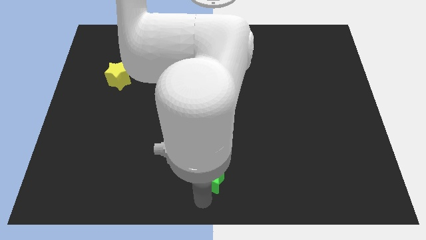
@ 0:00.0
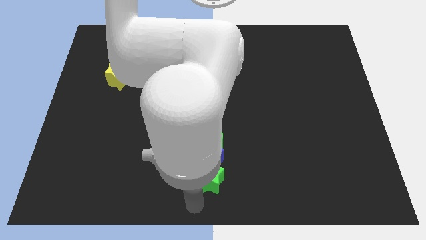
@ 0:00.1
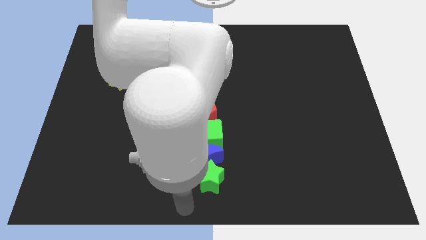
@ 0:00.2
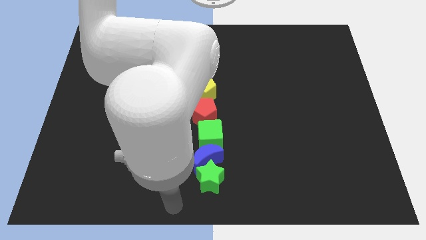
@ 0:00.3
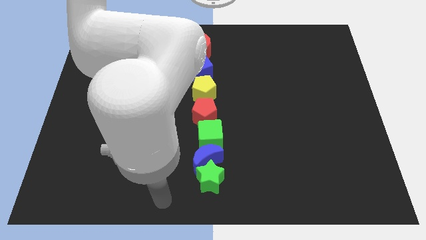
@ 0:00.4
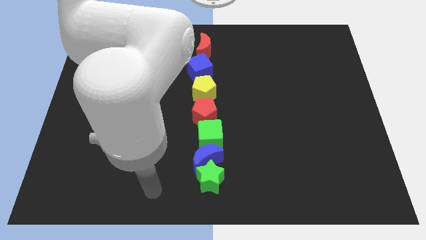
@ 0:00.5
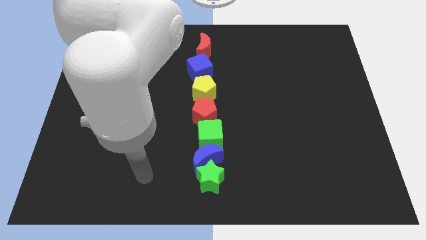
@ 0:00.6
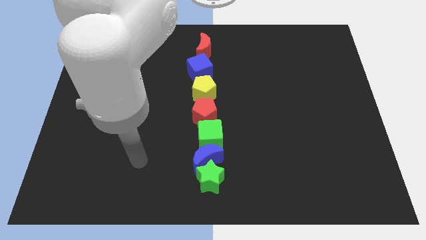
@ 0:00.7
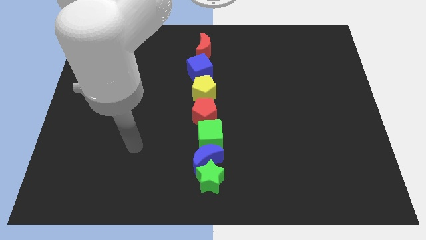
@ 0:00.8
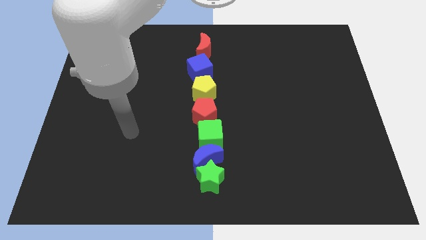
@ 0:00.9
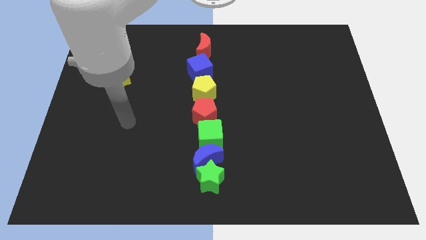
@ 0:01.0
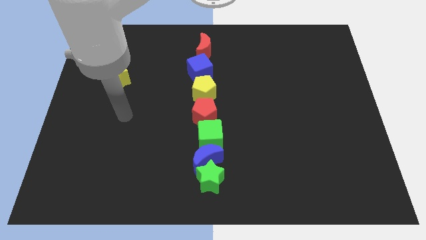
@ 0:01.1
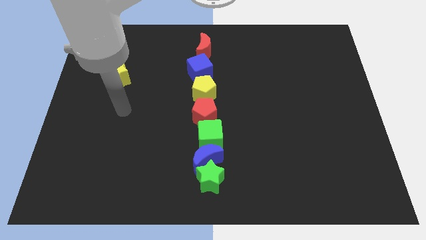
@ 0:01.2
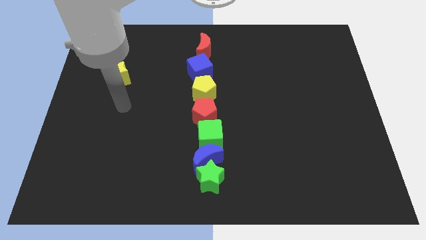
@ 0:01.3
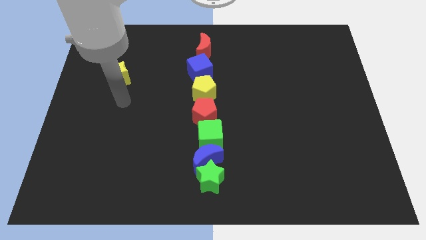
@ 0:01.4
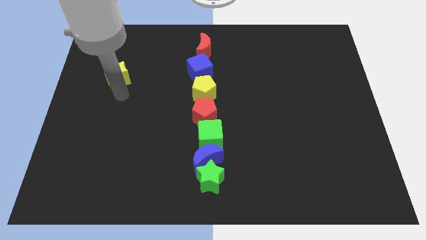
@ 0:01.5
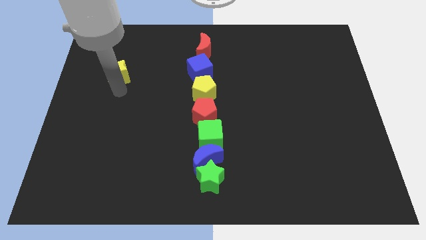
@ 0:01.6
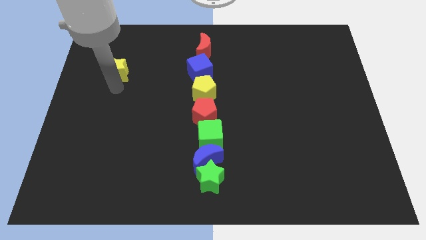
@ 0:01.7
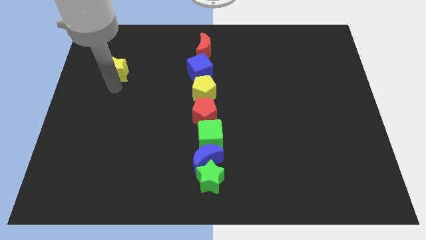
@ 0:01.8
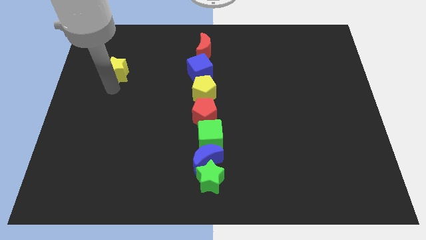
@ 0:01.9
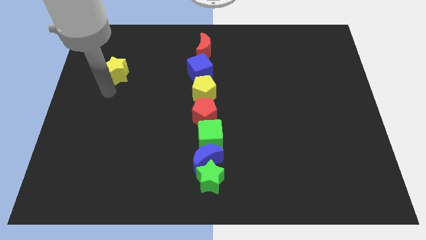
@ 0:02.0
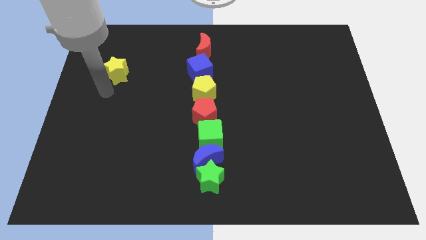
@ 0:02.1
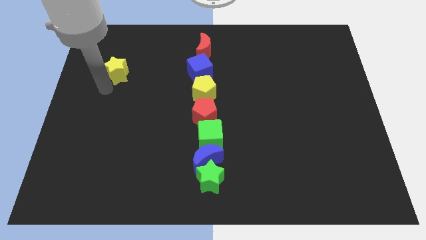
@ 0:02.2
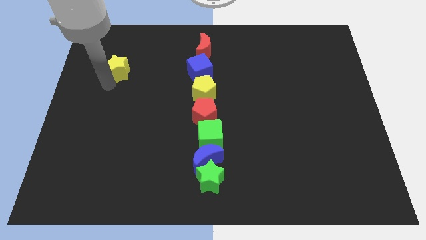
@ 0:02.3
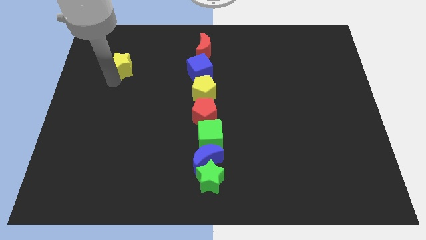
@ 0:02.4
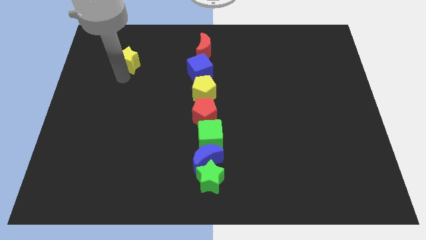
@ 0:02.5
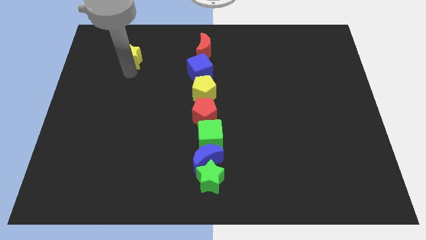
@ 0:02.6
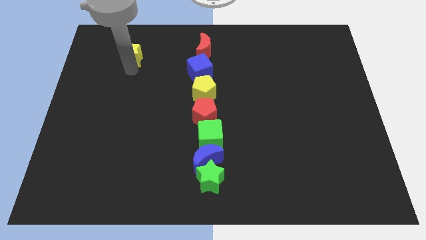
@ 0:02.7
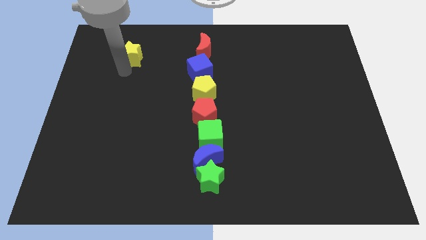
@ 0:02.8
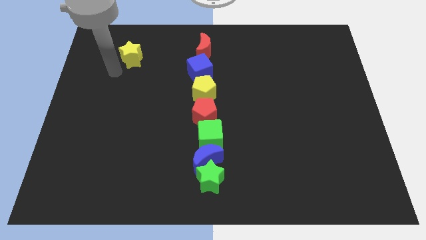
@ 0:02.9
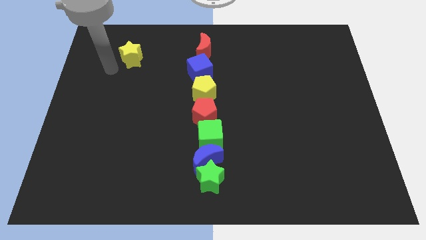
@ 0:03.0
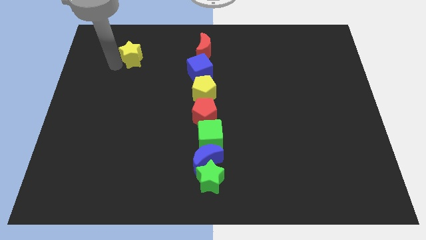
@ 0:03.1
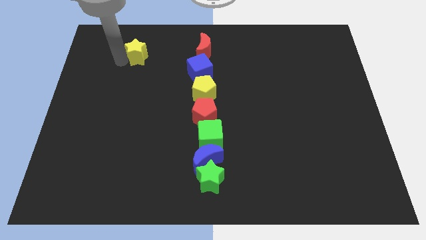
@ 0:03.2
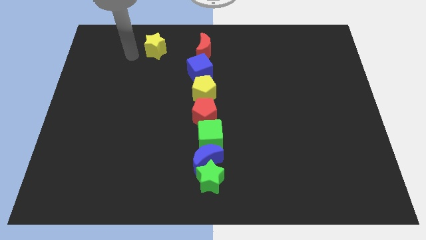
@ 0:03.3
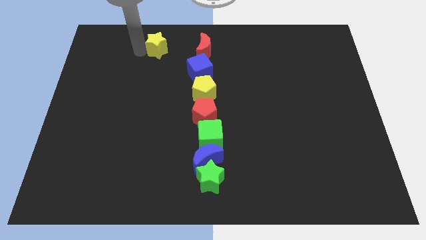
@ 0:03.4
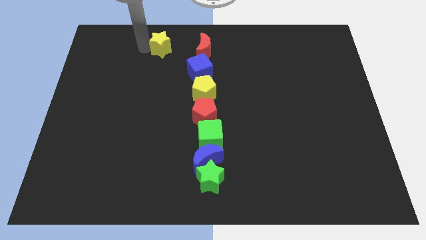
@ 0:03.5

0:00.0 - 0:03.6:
move the yellow star to the left of the red crescent

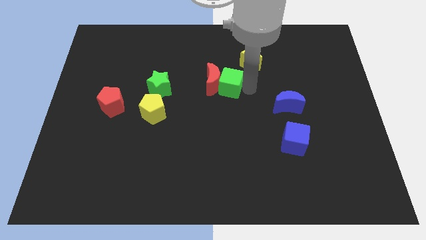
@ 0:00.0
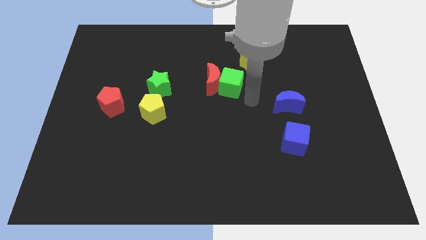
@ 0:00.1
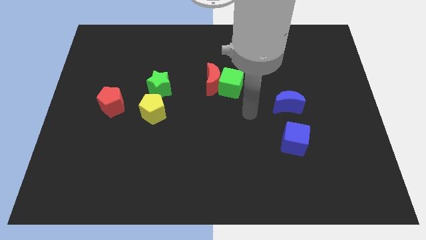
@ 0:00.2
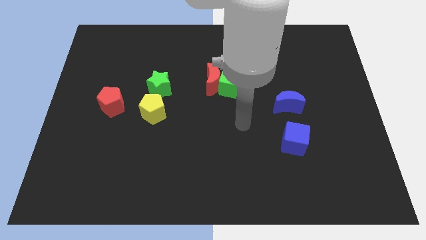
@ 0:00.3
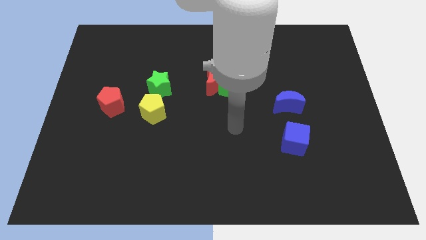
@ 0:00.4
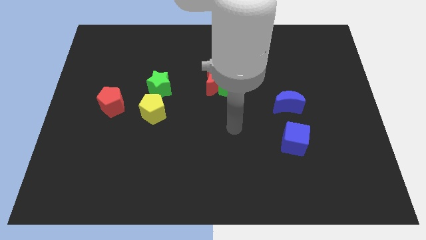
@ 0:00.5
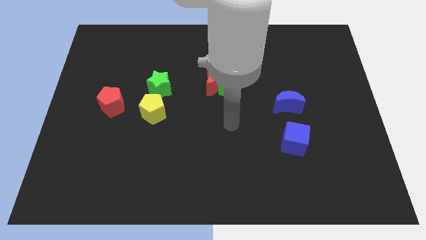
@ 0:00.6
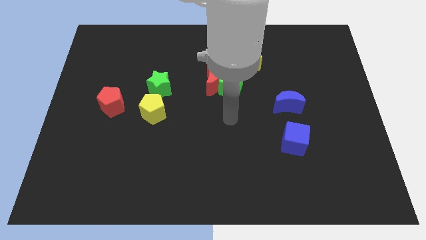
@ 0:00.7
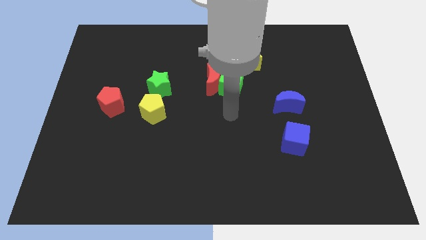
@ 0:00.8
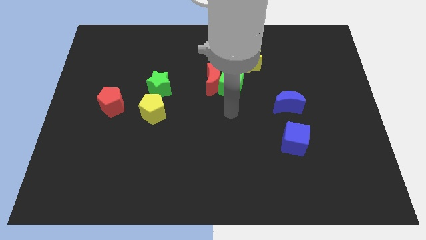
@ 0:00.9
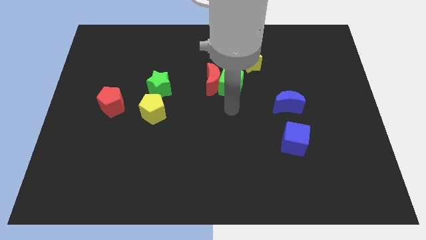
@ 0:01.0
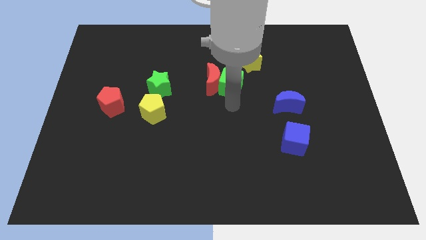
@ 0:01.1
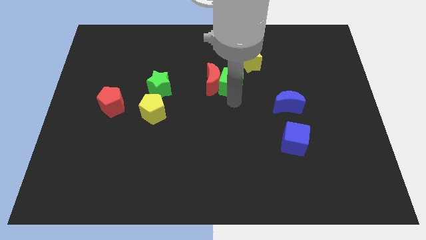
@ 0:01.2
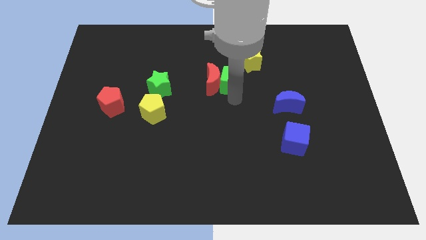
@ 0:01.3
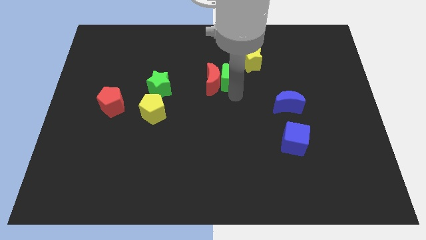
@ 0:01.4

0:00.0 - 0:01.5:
touch the green cube at the bottom

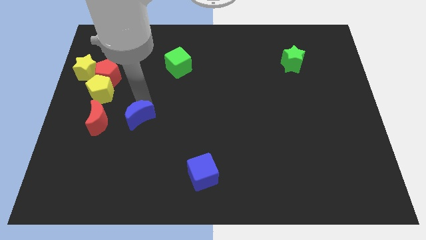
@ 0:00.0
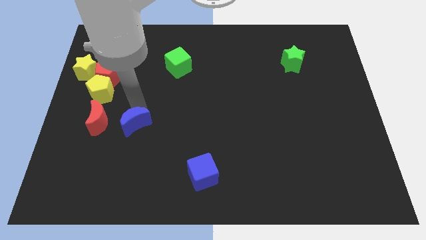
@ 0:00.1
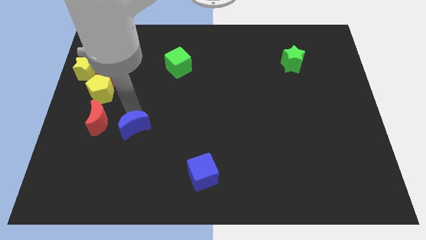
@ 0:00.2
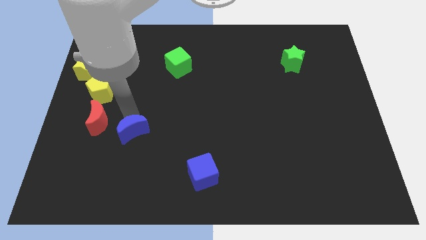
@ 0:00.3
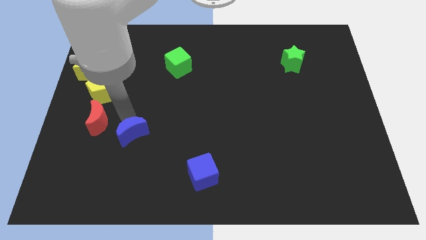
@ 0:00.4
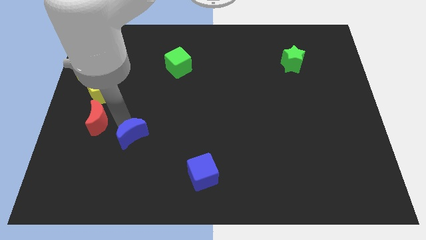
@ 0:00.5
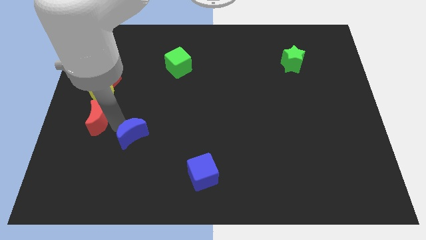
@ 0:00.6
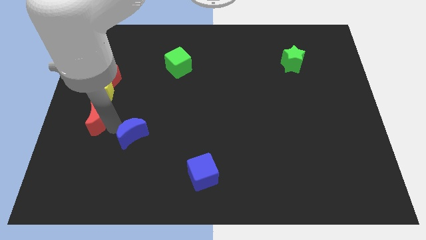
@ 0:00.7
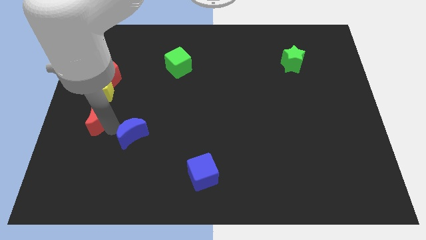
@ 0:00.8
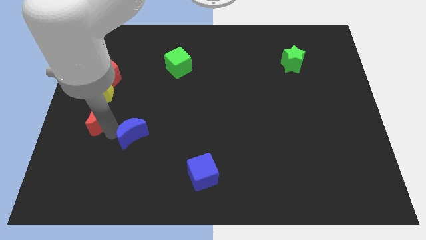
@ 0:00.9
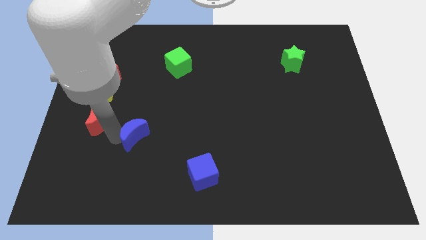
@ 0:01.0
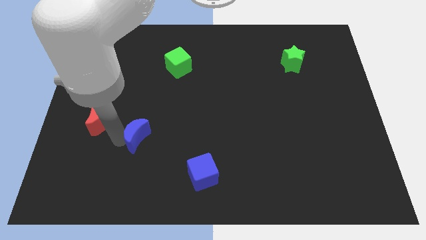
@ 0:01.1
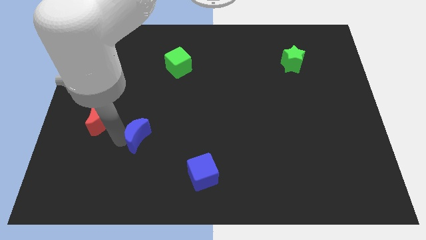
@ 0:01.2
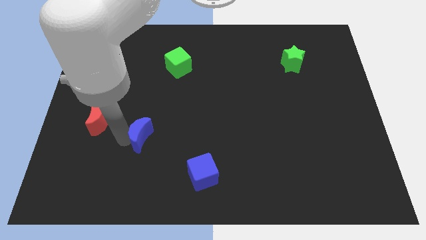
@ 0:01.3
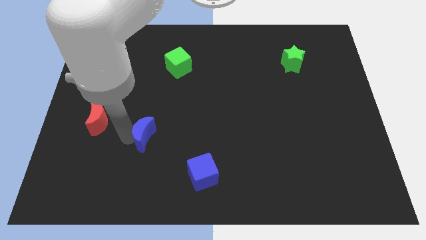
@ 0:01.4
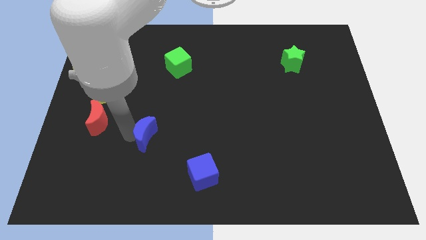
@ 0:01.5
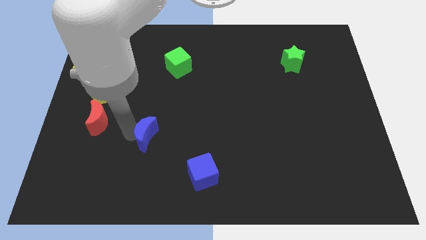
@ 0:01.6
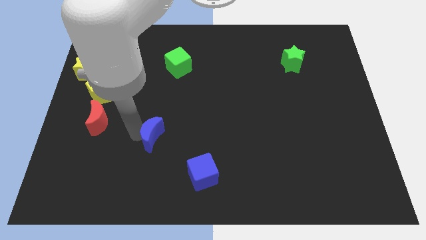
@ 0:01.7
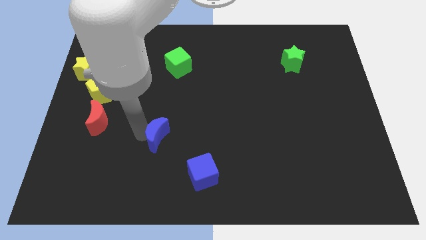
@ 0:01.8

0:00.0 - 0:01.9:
move the blue moon towards the right side

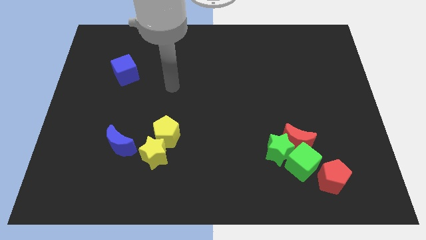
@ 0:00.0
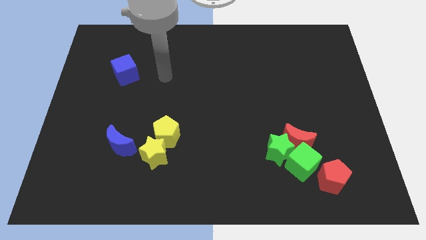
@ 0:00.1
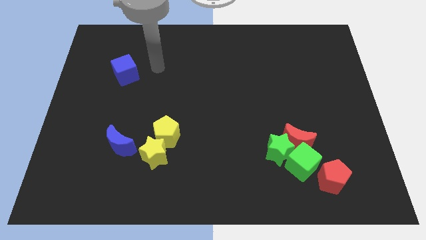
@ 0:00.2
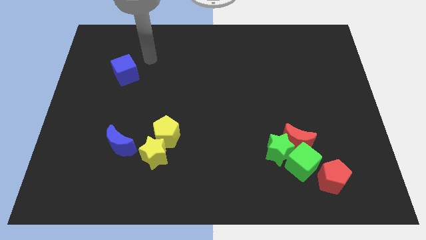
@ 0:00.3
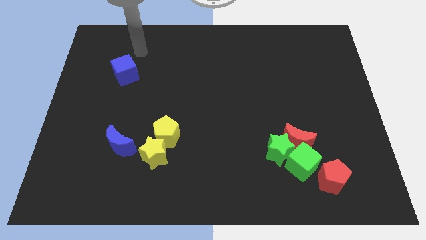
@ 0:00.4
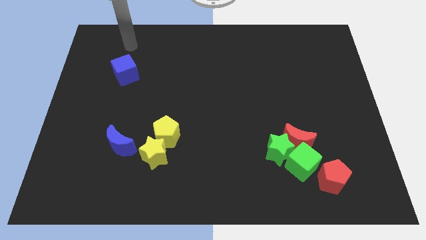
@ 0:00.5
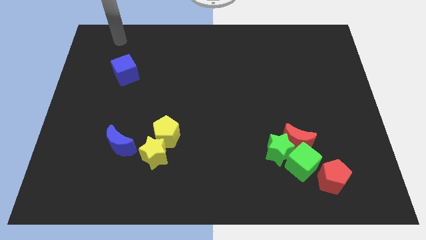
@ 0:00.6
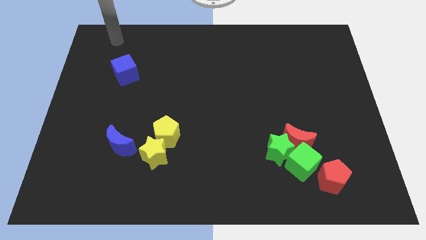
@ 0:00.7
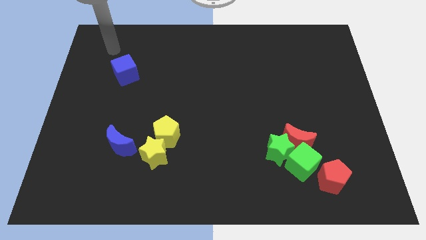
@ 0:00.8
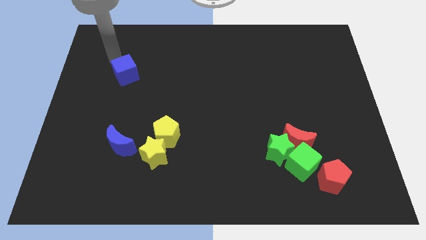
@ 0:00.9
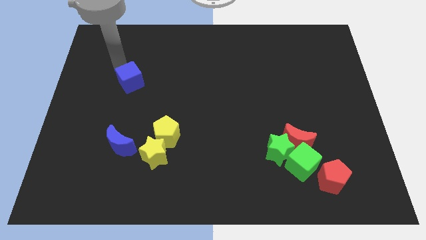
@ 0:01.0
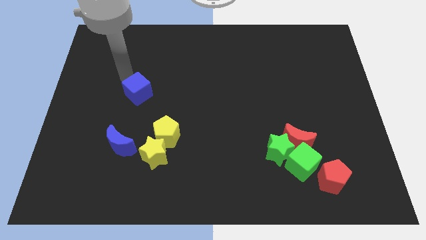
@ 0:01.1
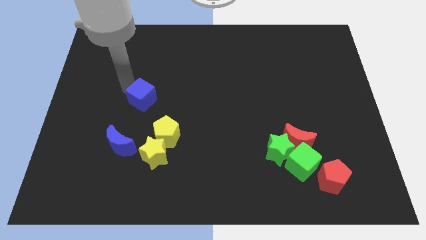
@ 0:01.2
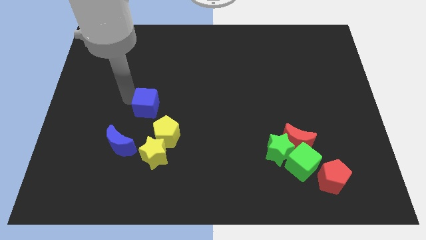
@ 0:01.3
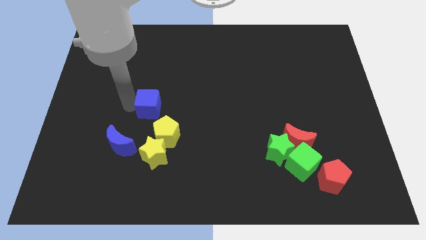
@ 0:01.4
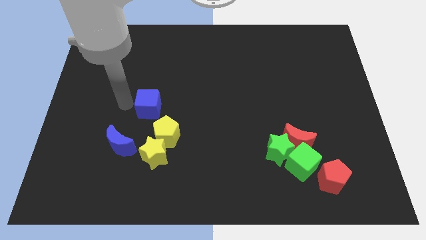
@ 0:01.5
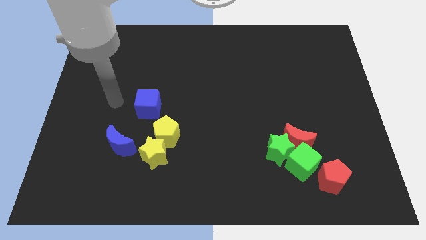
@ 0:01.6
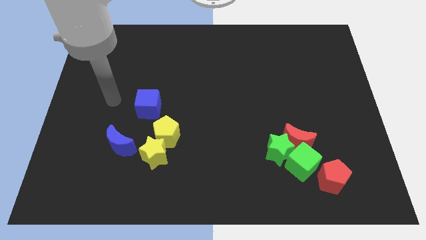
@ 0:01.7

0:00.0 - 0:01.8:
move the blue cube to the top left of the yellow pentagon
